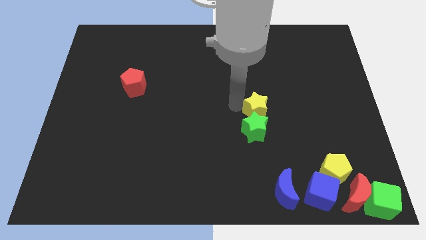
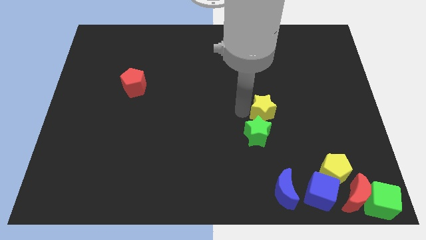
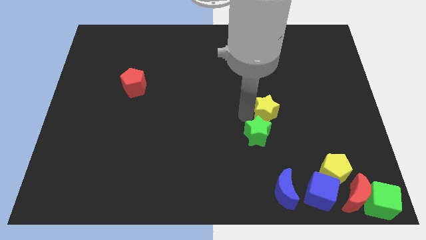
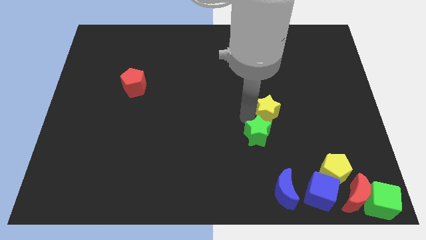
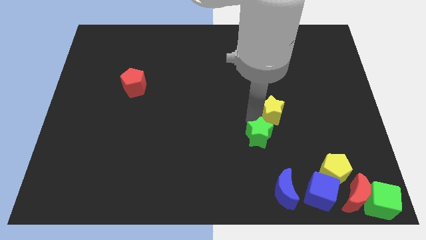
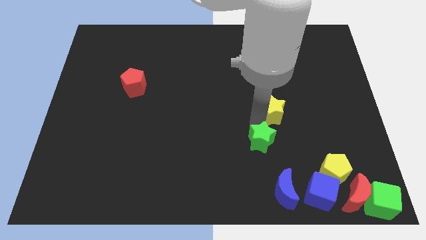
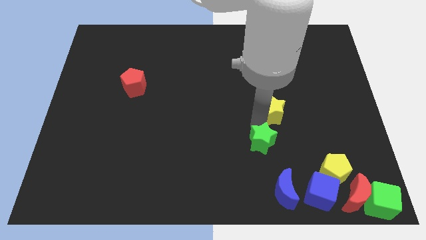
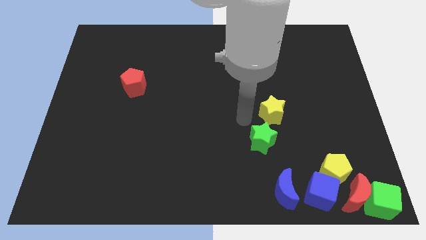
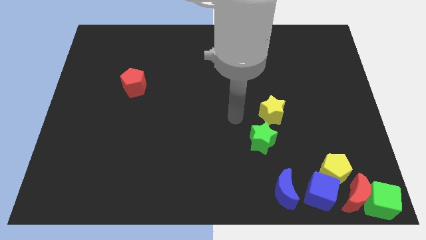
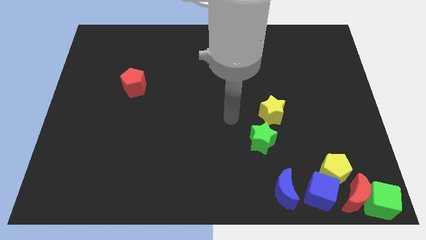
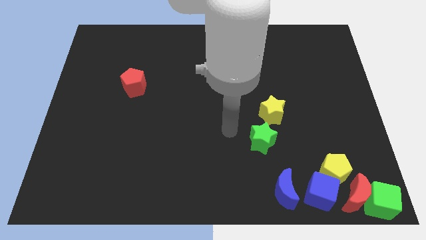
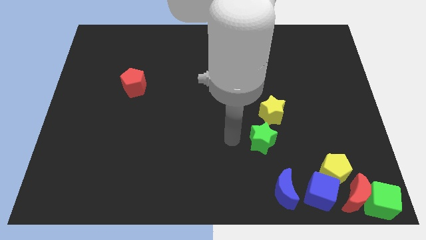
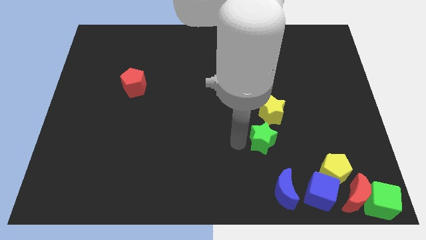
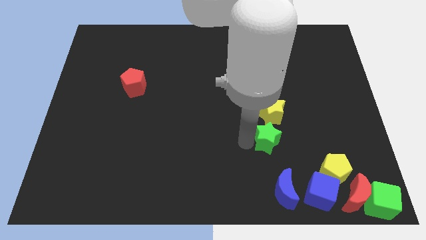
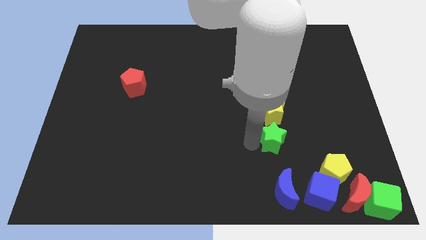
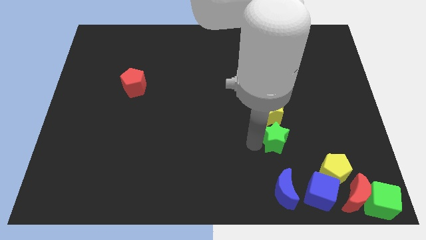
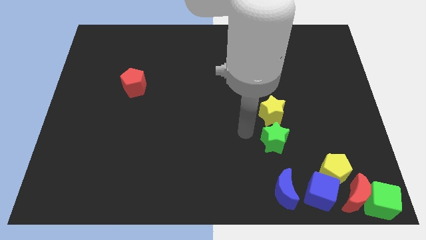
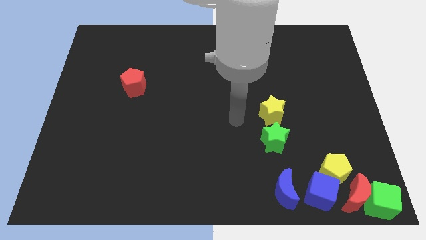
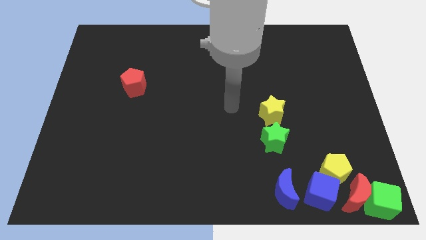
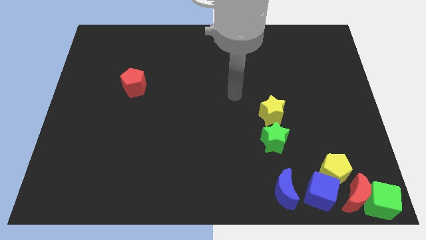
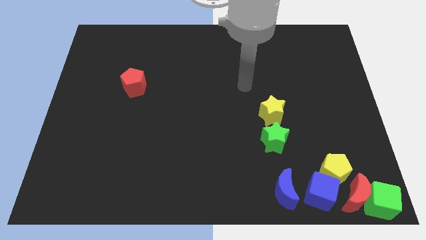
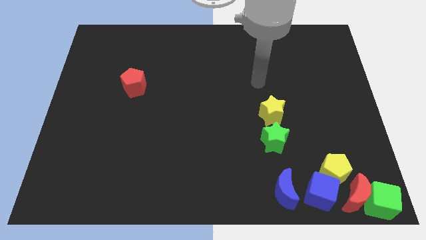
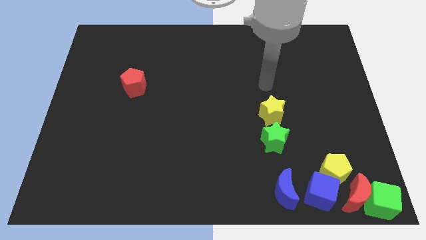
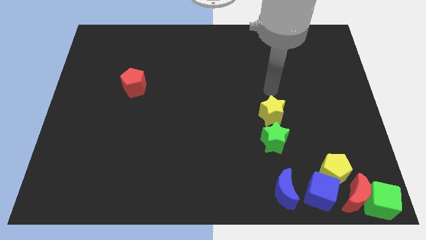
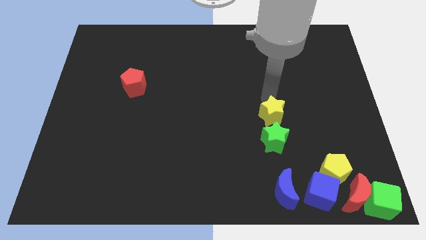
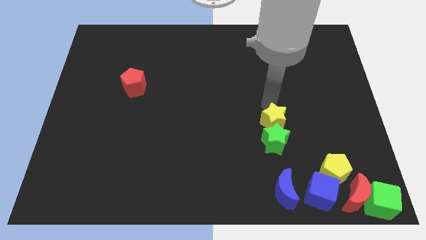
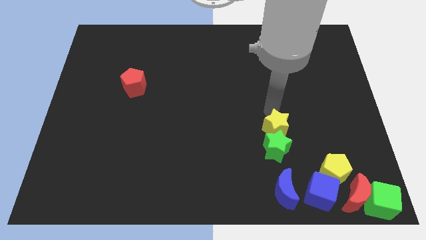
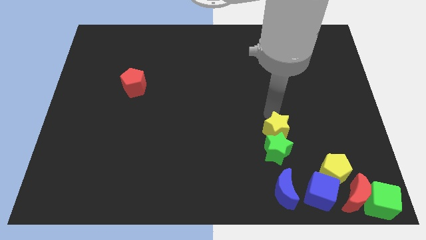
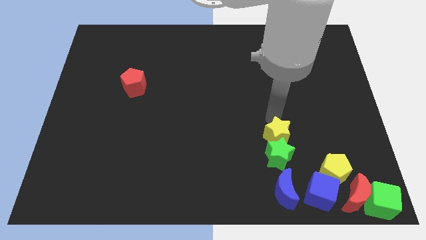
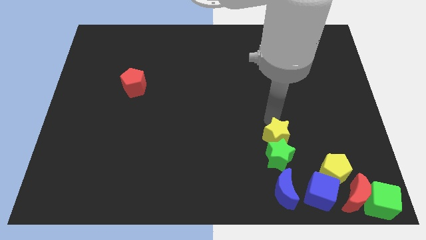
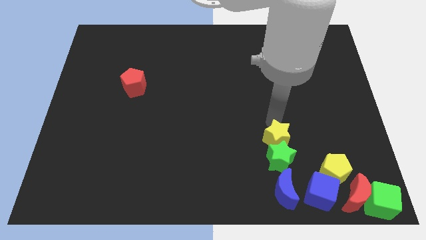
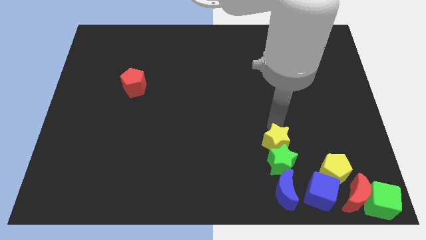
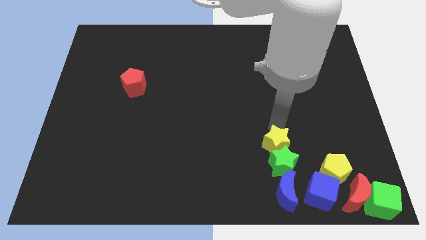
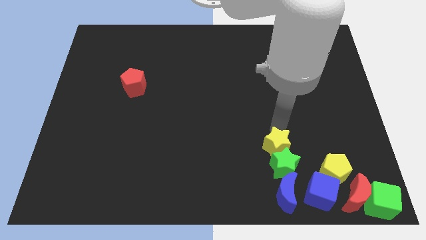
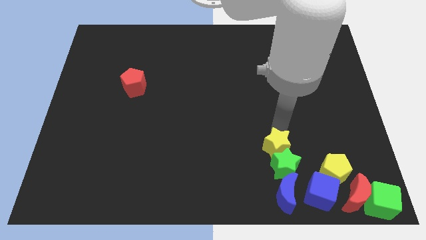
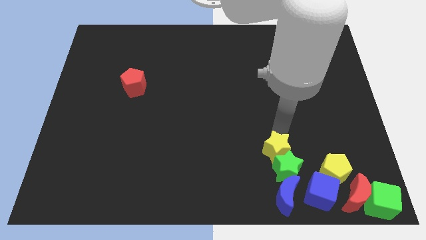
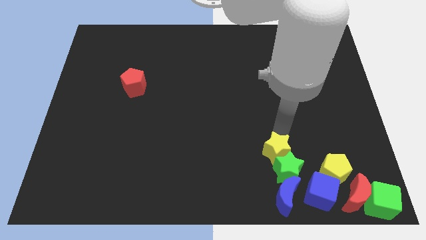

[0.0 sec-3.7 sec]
move both the stars into group of blocks

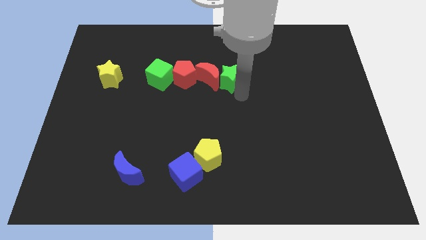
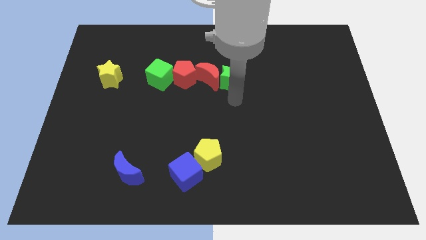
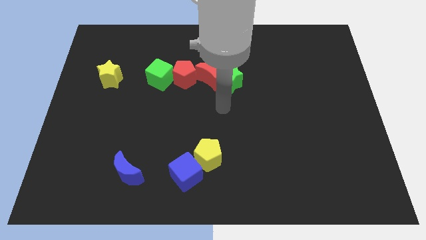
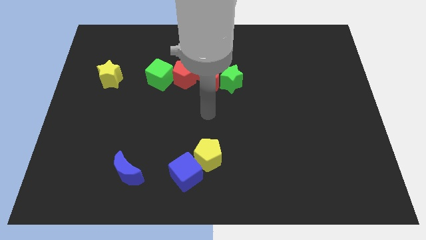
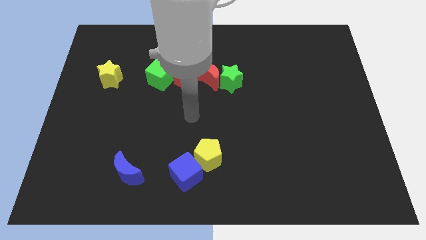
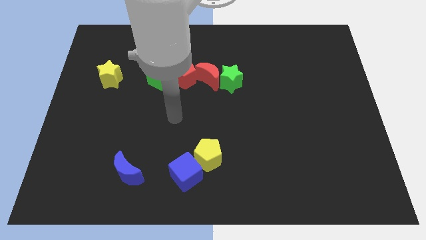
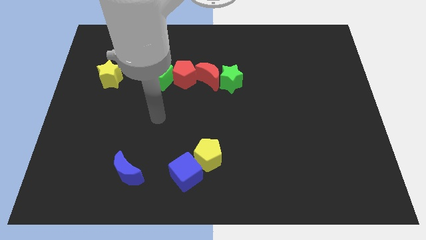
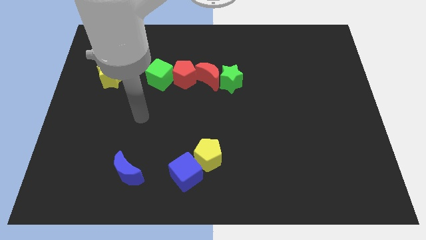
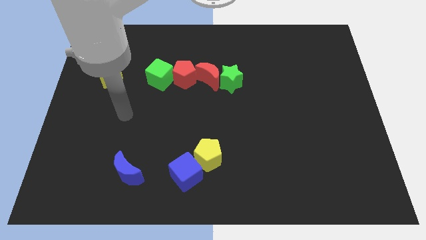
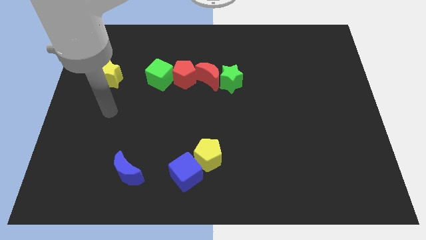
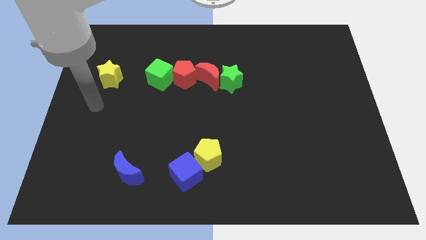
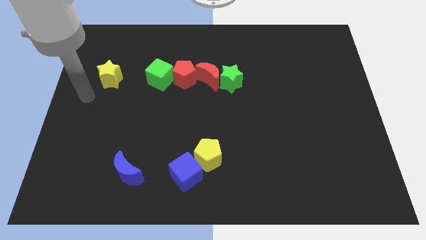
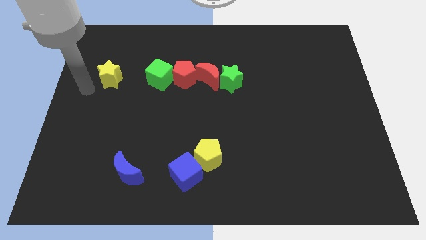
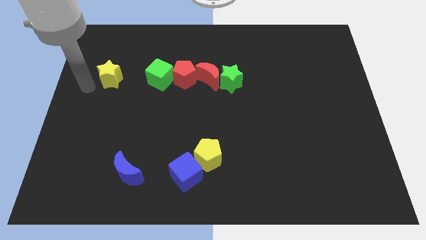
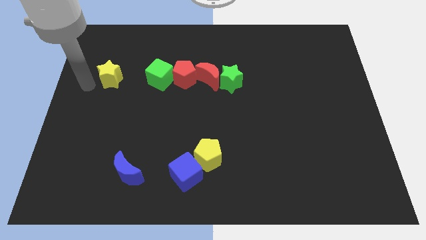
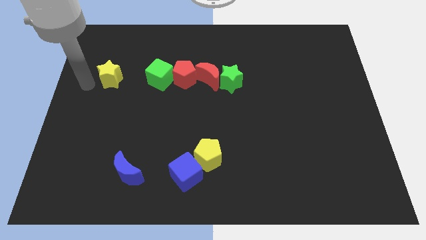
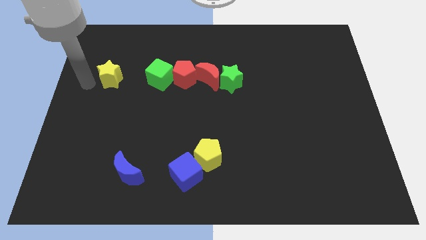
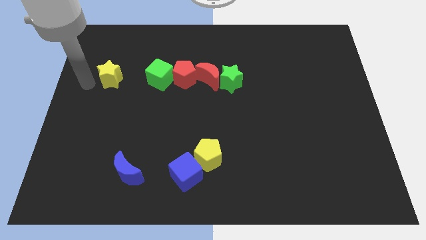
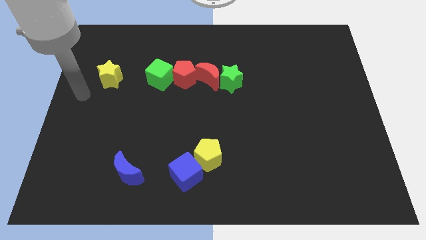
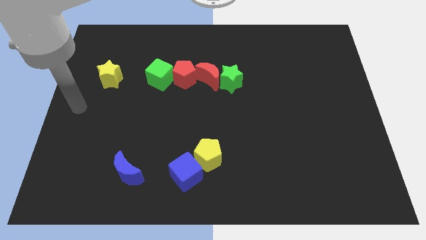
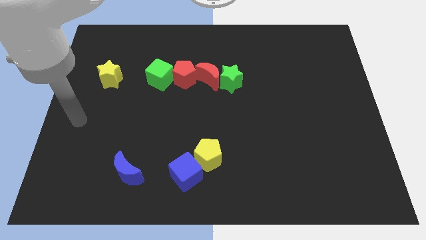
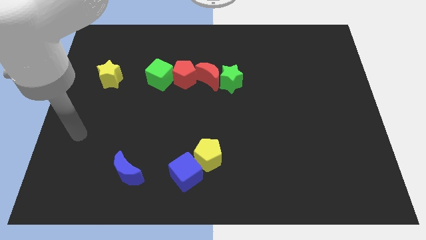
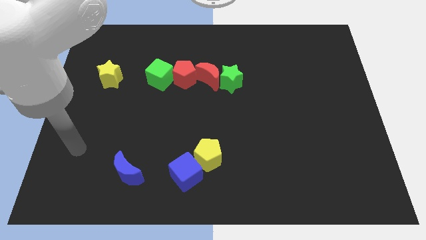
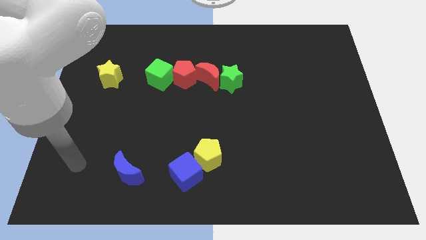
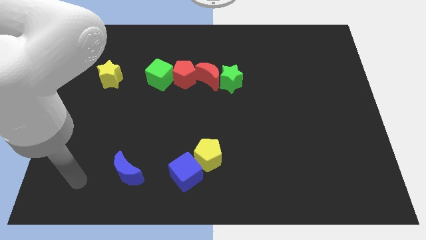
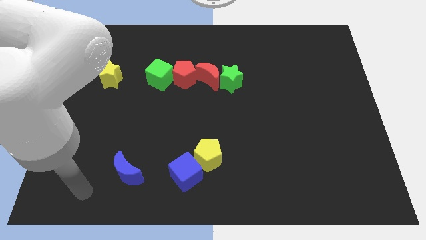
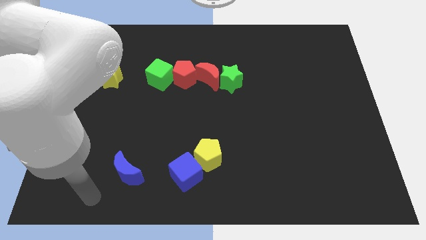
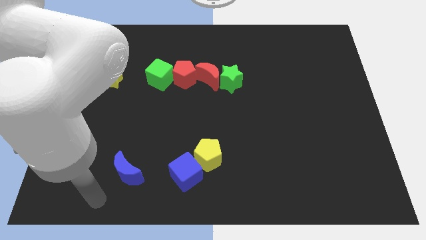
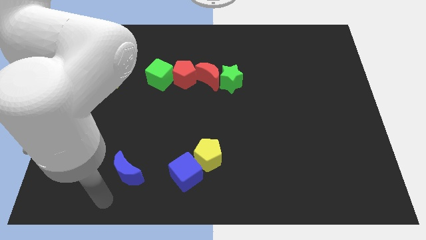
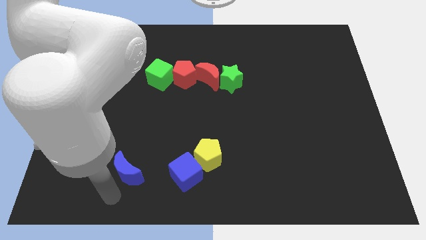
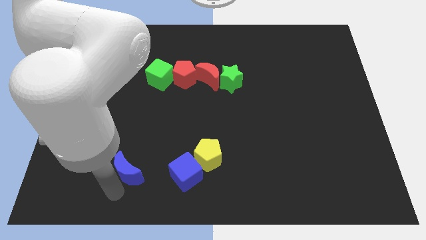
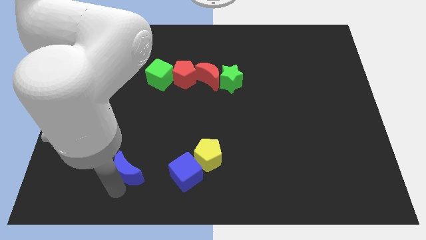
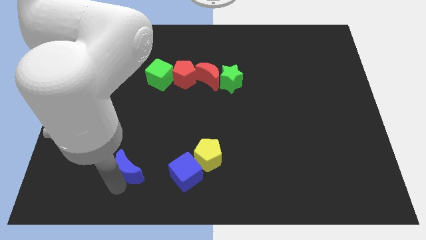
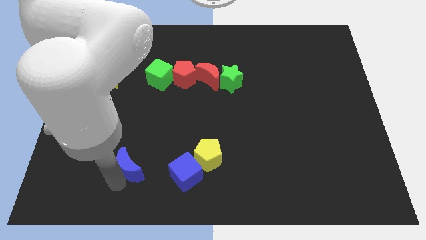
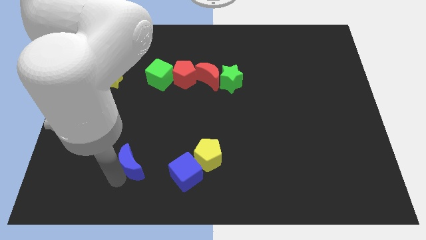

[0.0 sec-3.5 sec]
slide your arm down to the blue moon

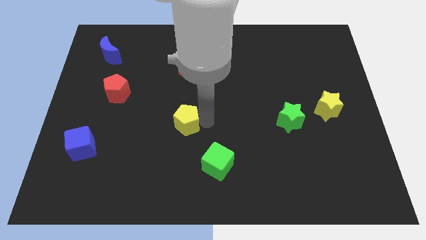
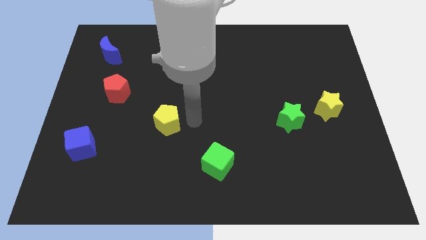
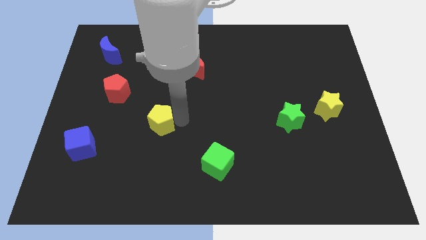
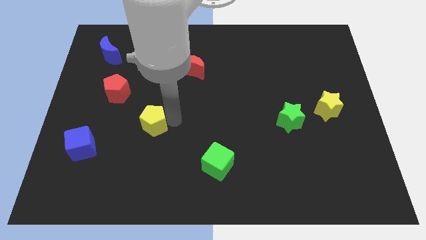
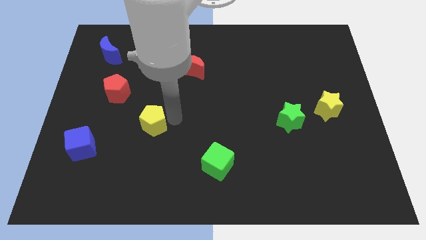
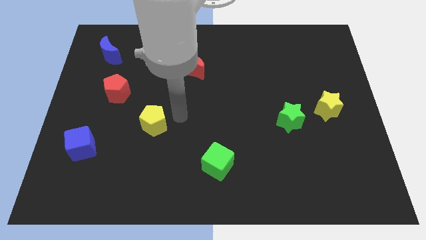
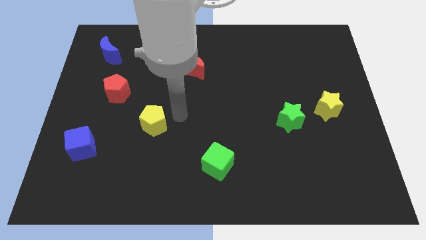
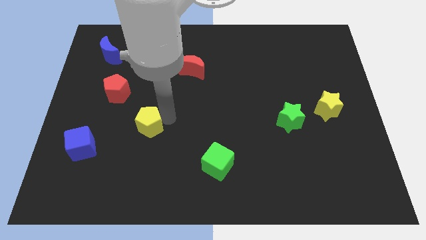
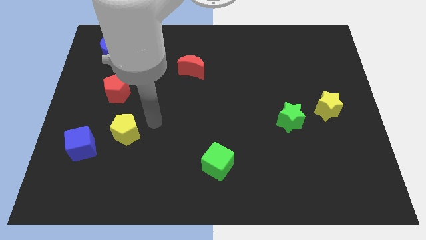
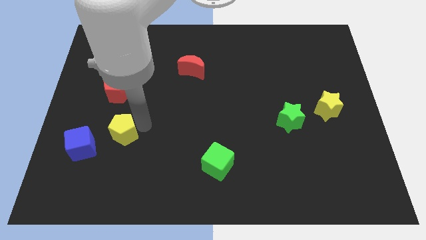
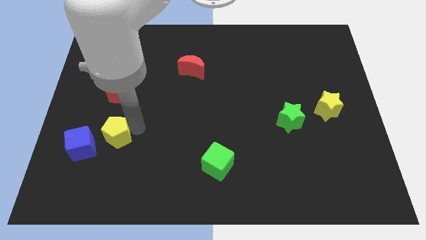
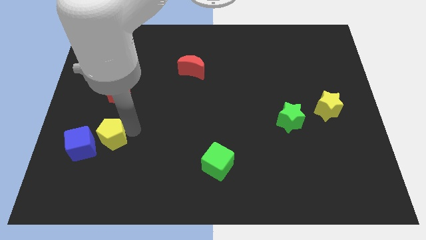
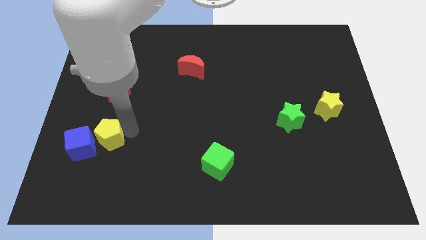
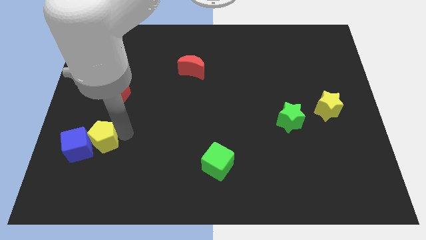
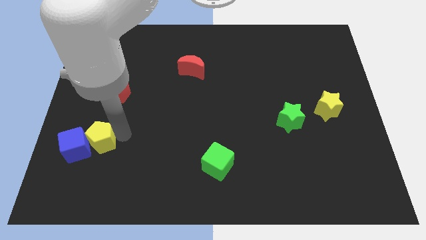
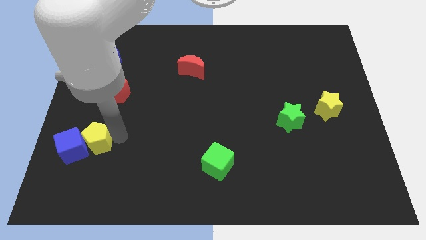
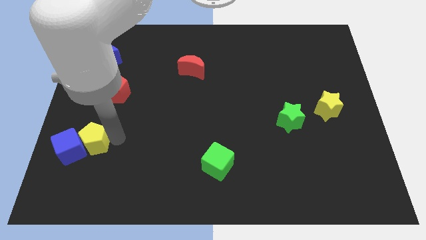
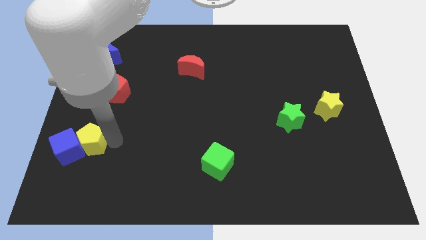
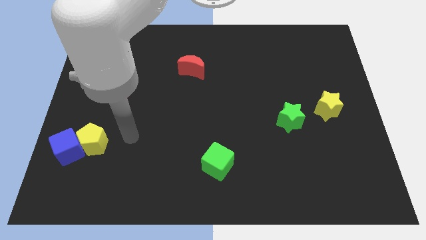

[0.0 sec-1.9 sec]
move the yellow pentagon into the blue cube
